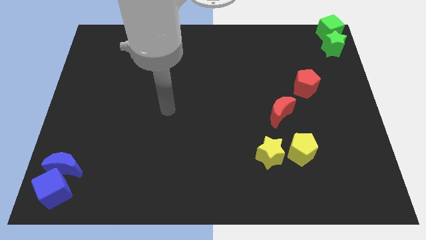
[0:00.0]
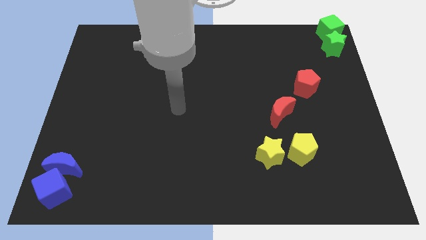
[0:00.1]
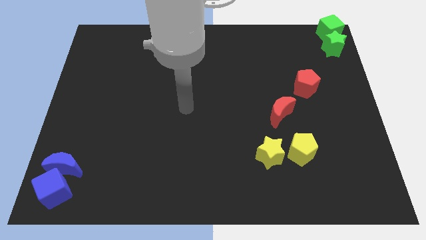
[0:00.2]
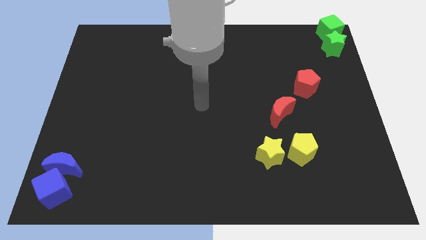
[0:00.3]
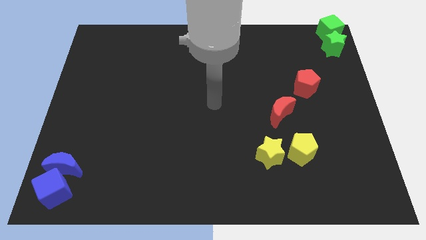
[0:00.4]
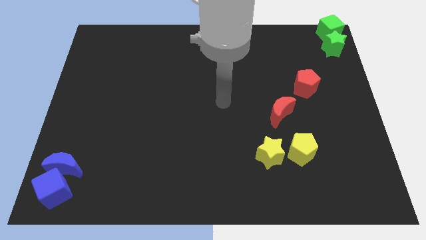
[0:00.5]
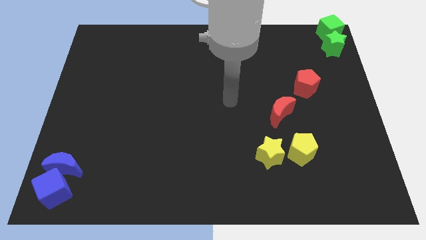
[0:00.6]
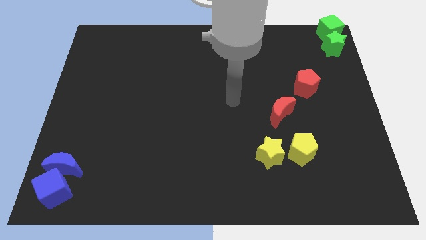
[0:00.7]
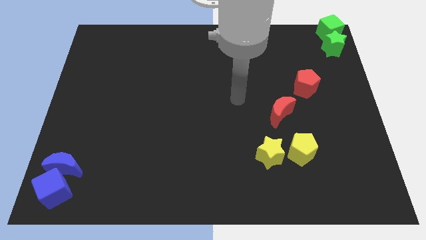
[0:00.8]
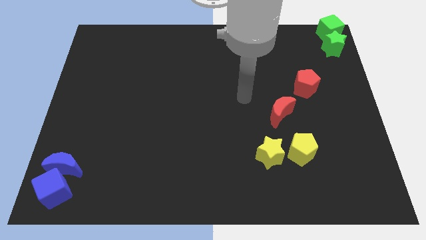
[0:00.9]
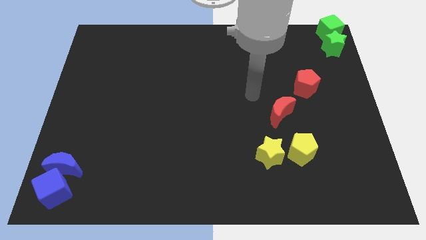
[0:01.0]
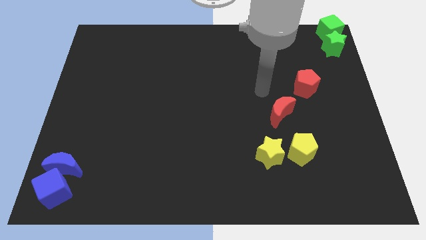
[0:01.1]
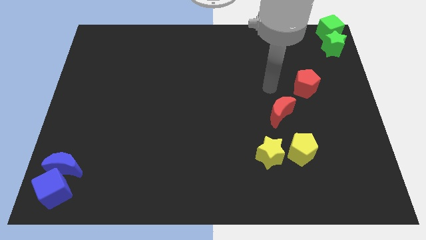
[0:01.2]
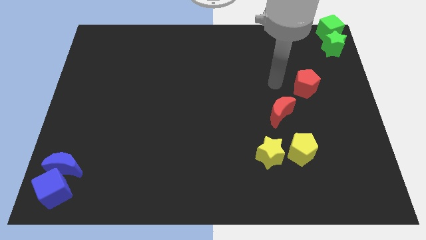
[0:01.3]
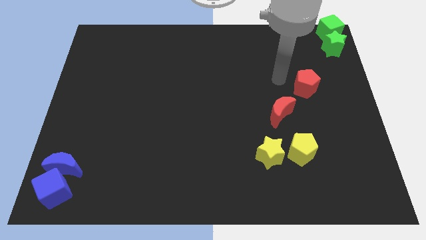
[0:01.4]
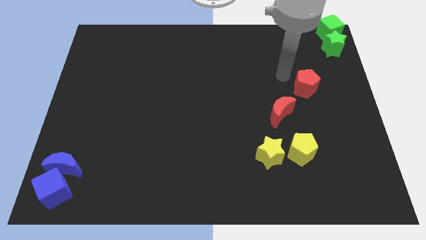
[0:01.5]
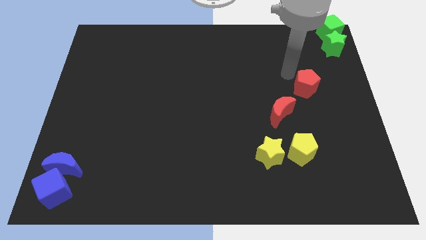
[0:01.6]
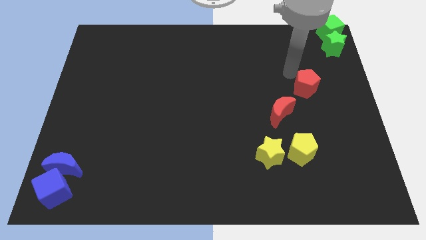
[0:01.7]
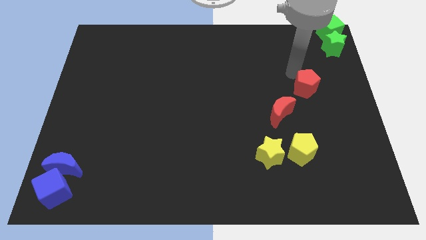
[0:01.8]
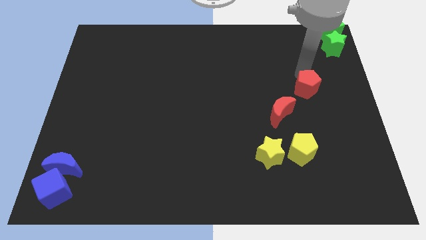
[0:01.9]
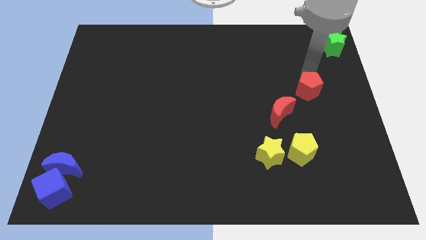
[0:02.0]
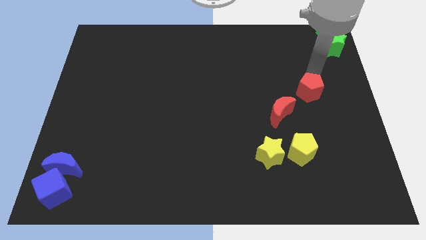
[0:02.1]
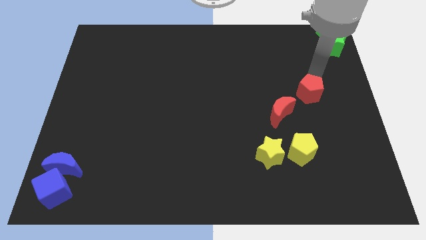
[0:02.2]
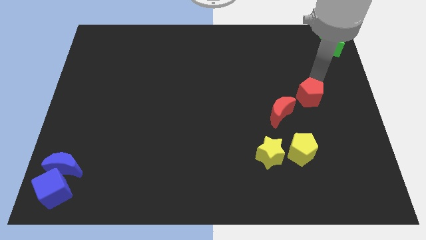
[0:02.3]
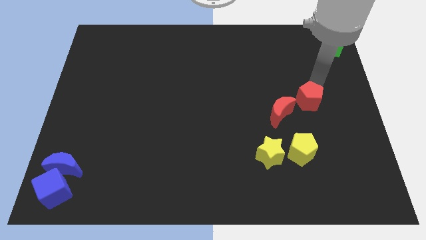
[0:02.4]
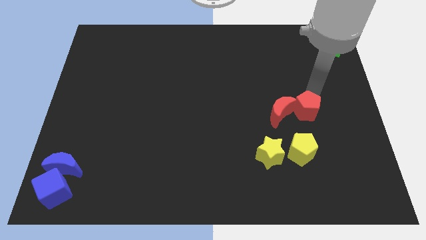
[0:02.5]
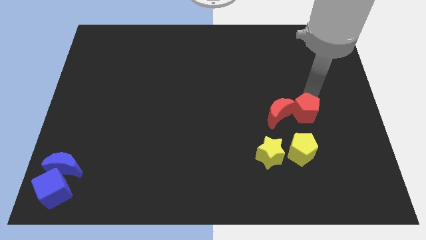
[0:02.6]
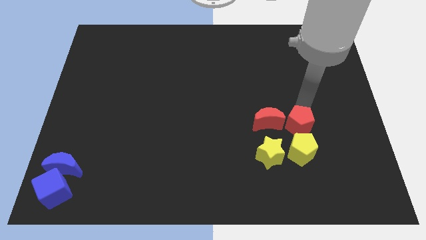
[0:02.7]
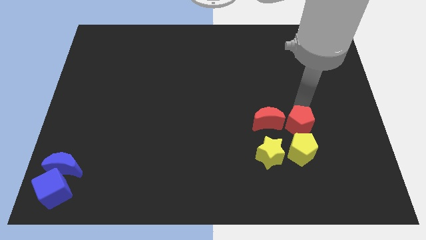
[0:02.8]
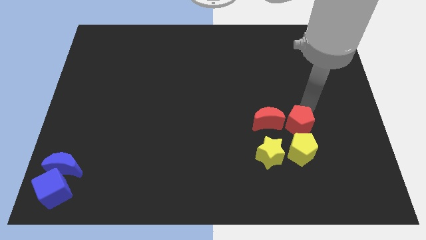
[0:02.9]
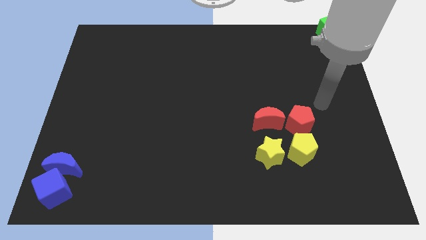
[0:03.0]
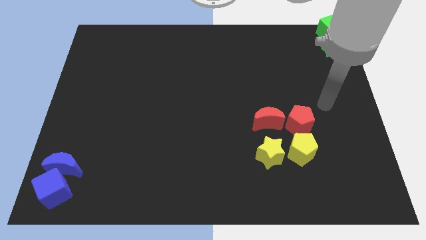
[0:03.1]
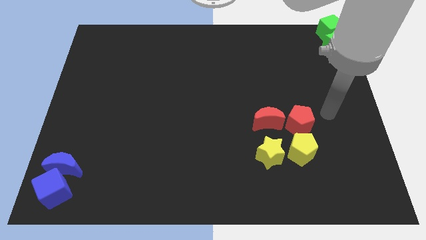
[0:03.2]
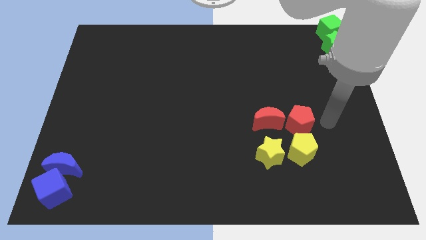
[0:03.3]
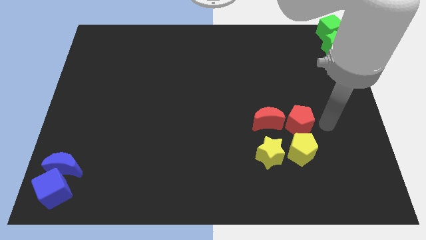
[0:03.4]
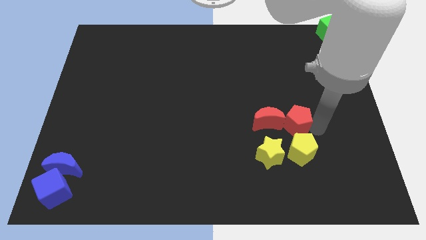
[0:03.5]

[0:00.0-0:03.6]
make the red pentagon to touch the red crescent

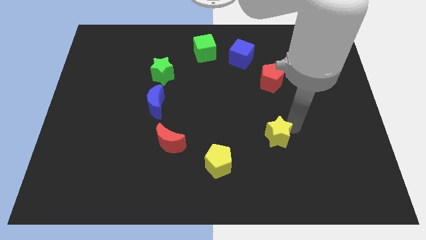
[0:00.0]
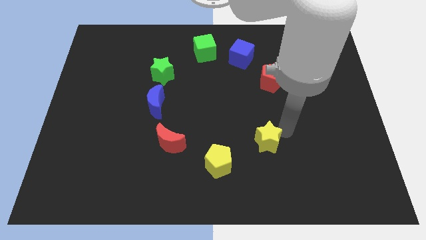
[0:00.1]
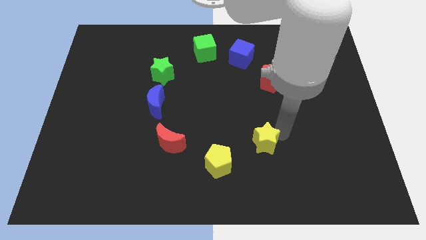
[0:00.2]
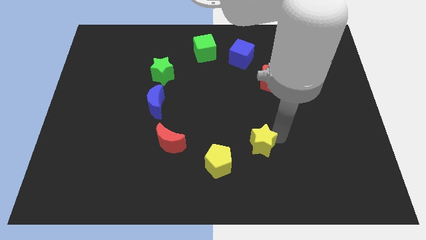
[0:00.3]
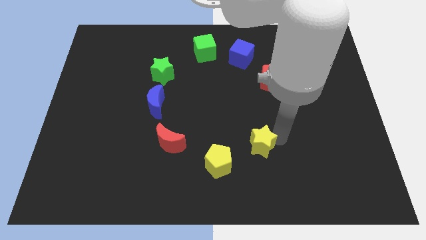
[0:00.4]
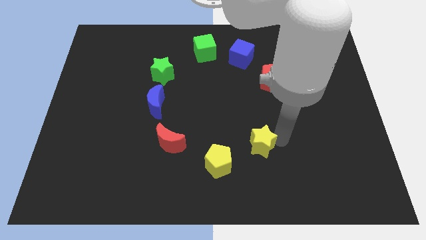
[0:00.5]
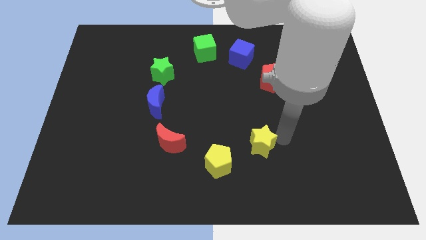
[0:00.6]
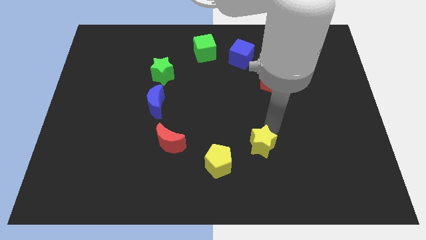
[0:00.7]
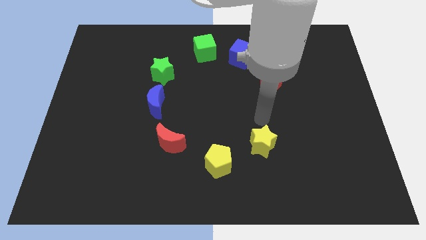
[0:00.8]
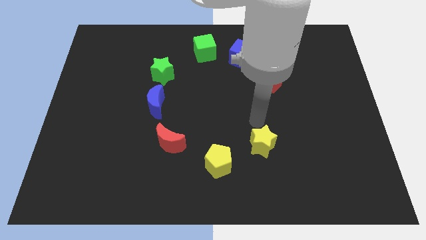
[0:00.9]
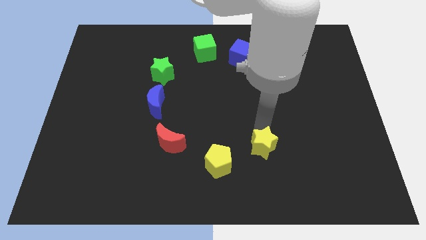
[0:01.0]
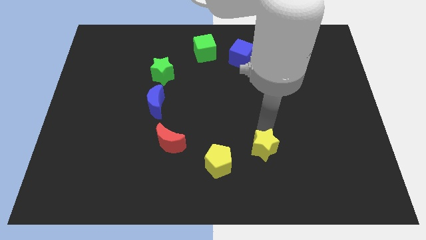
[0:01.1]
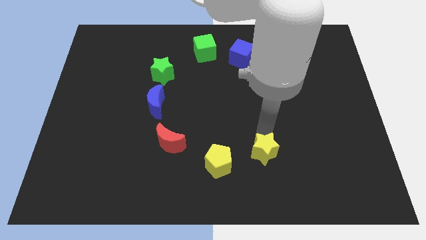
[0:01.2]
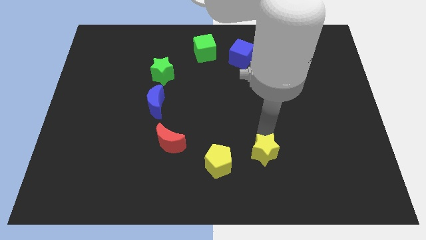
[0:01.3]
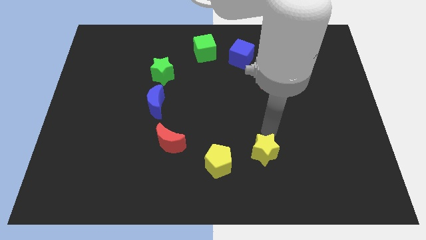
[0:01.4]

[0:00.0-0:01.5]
push the yellow star towards the right side of the yellow pentagon

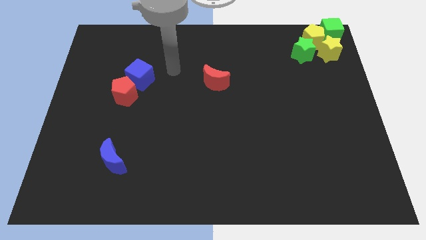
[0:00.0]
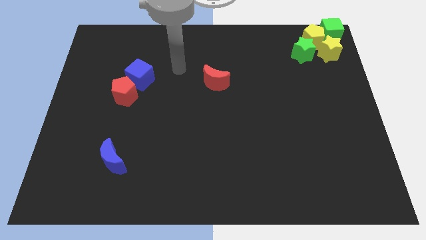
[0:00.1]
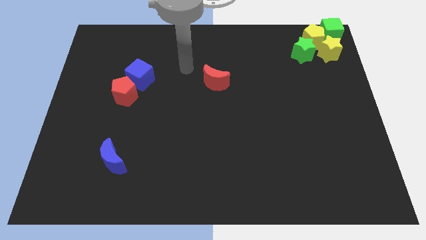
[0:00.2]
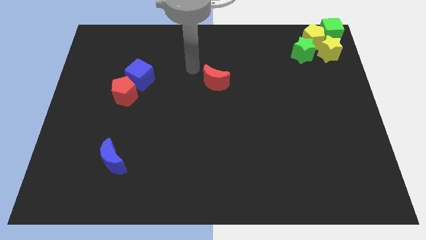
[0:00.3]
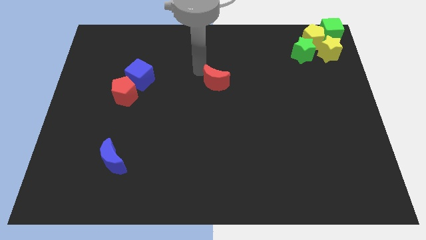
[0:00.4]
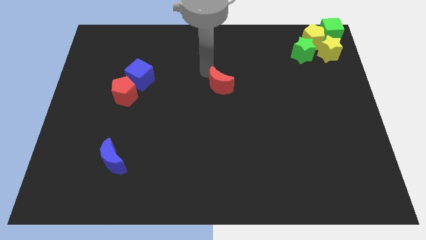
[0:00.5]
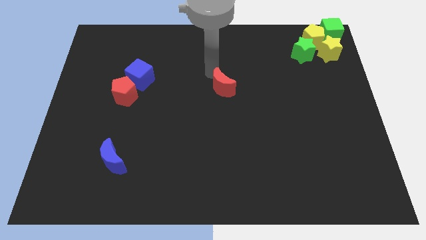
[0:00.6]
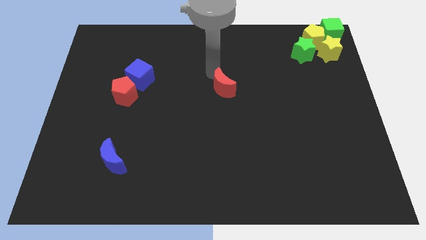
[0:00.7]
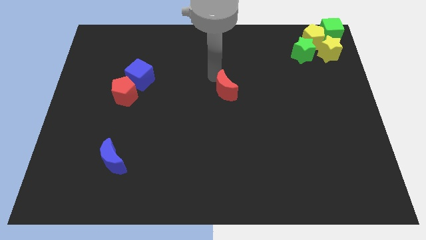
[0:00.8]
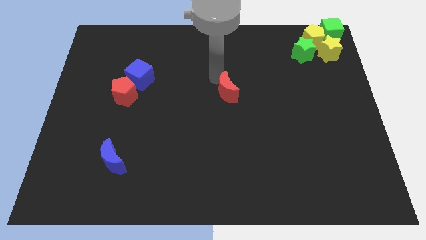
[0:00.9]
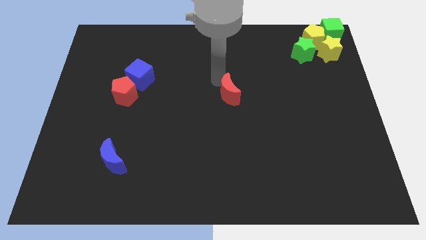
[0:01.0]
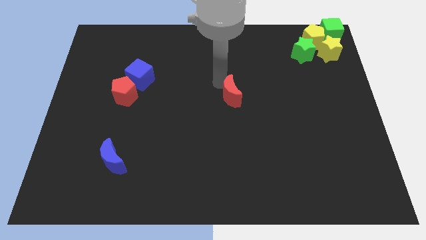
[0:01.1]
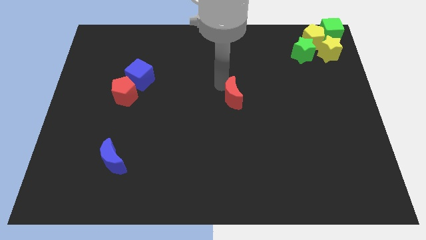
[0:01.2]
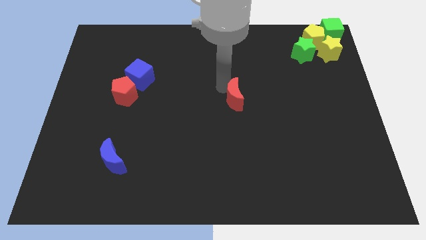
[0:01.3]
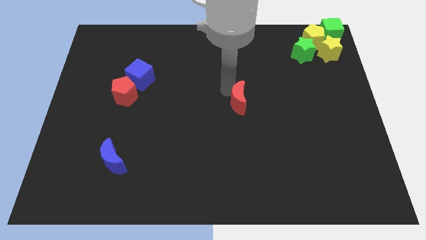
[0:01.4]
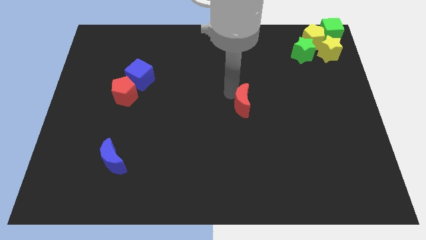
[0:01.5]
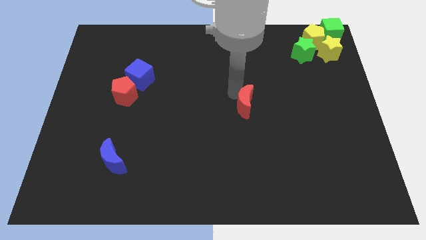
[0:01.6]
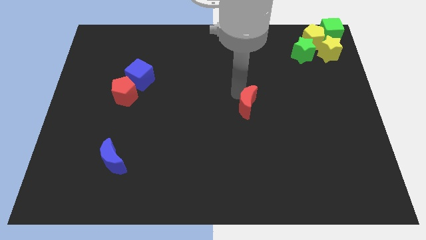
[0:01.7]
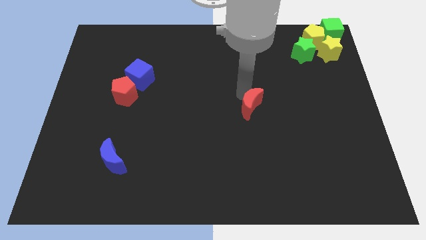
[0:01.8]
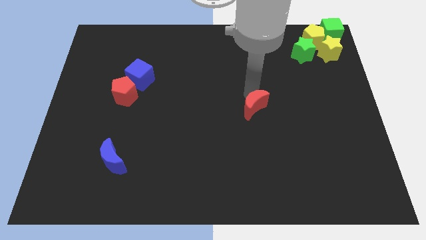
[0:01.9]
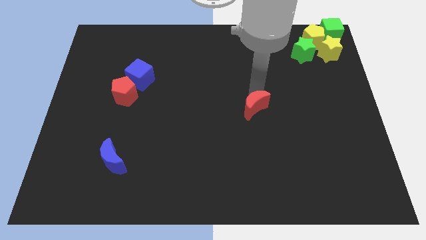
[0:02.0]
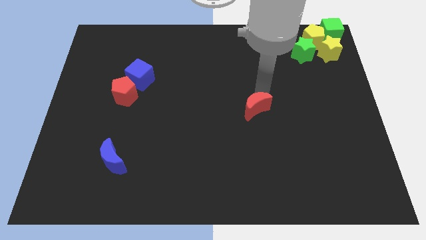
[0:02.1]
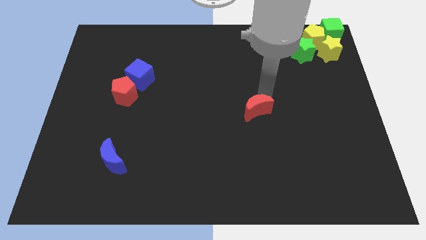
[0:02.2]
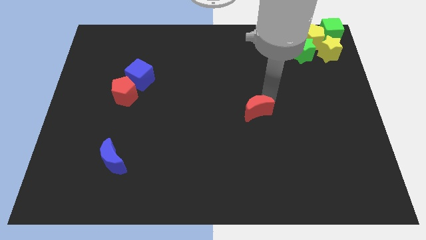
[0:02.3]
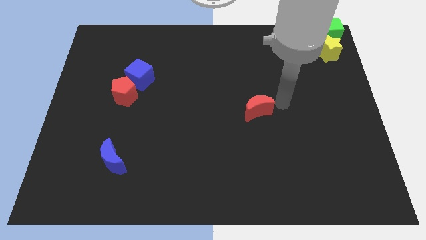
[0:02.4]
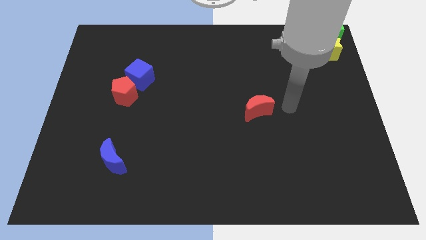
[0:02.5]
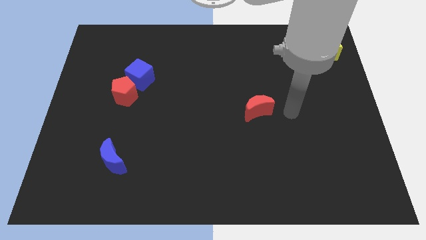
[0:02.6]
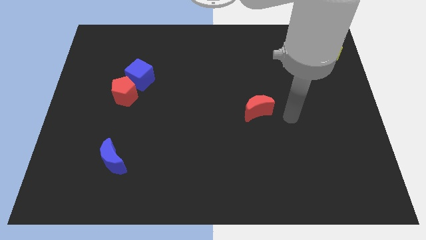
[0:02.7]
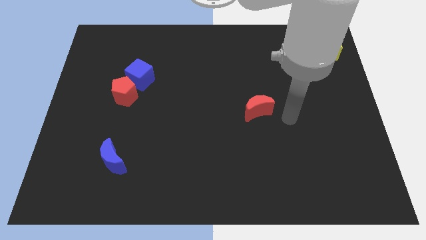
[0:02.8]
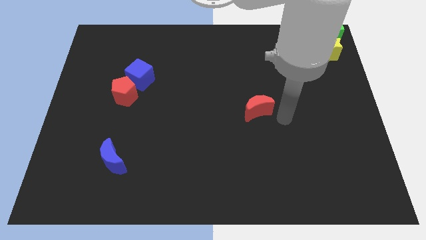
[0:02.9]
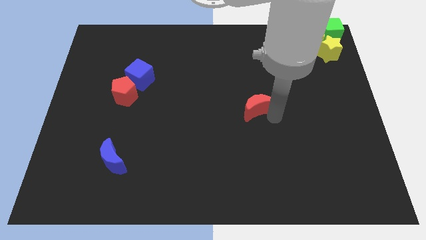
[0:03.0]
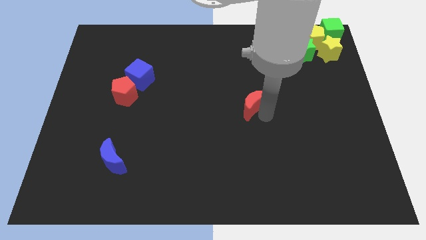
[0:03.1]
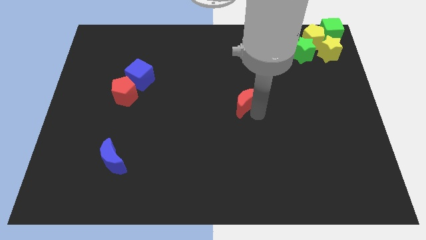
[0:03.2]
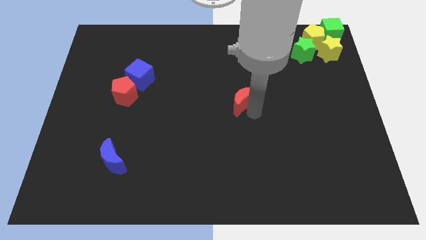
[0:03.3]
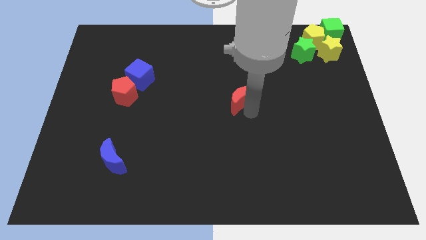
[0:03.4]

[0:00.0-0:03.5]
place the red pentagon diagonally top right to blue moon to the center of the board

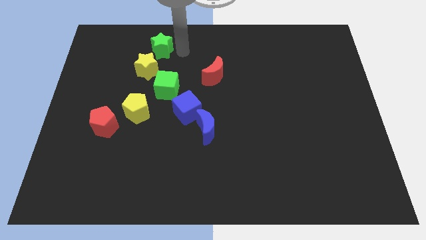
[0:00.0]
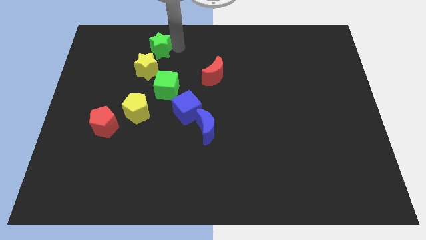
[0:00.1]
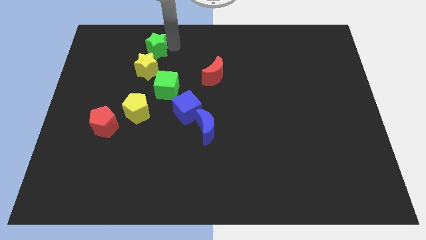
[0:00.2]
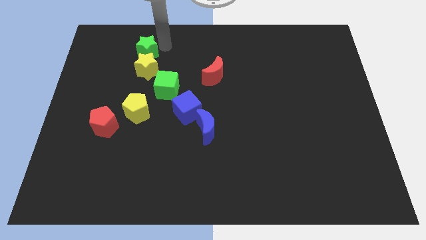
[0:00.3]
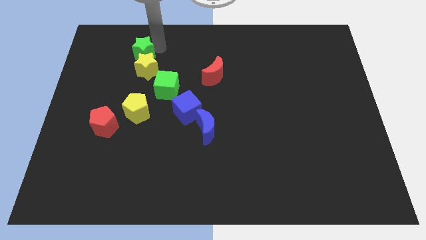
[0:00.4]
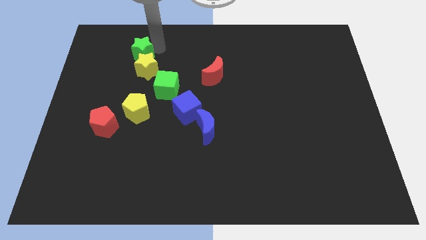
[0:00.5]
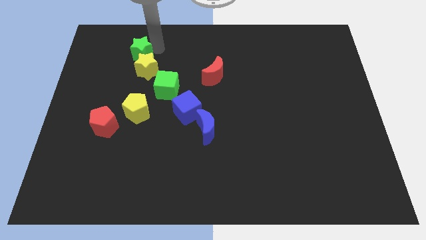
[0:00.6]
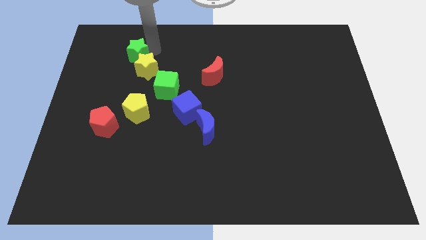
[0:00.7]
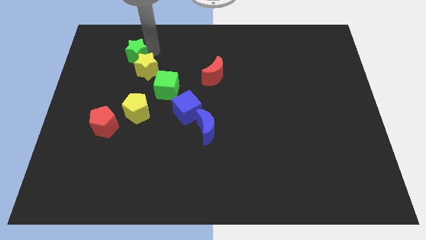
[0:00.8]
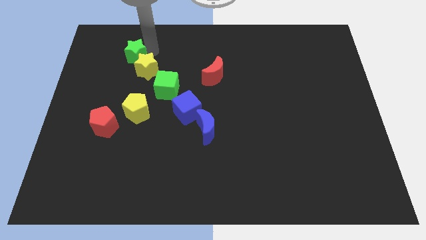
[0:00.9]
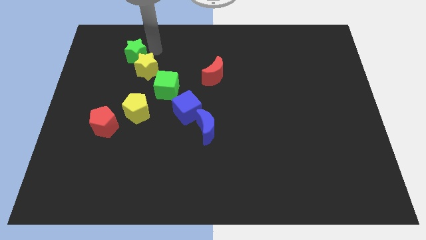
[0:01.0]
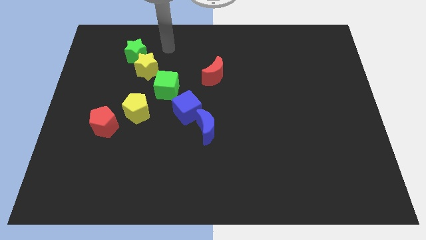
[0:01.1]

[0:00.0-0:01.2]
place the green star on the top of the yellow star and make a line
